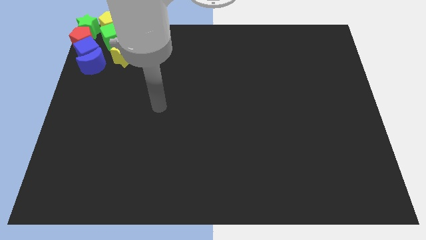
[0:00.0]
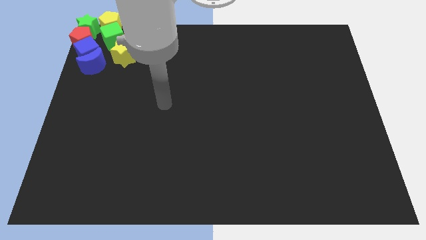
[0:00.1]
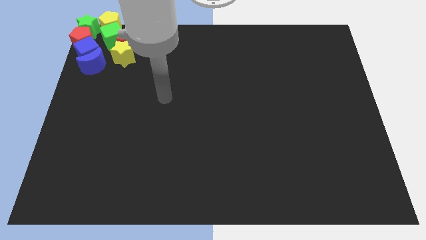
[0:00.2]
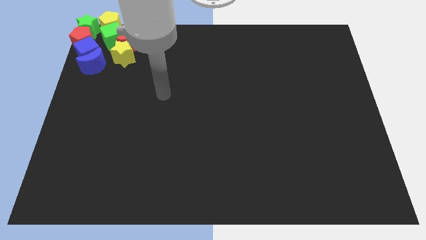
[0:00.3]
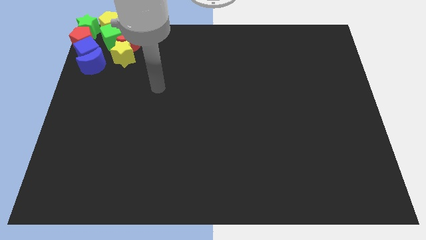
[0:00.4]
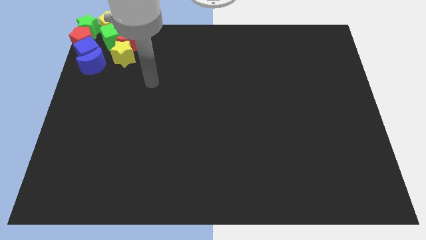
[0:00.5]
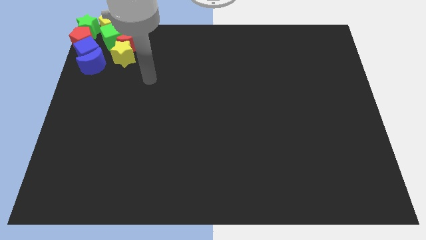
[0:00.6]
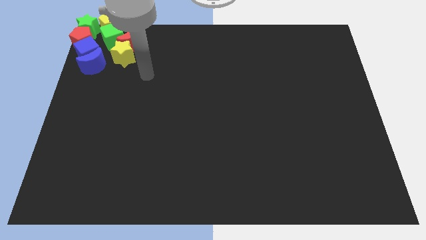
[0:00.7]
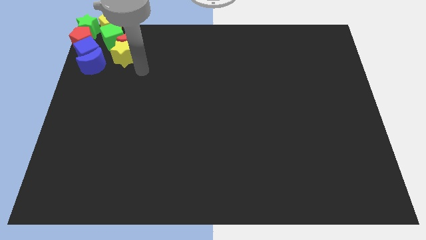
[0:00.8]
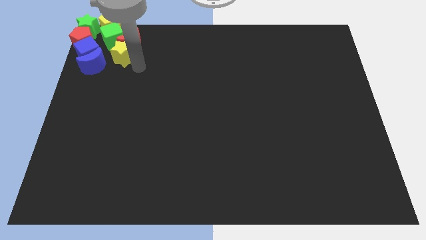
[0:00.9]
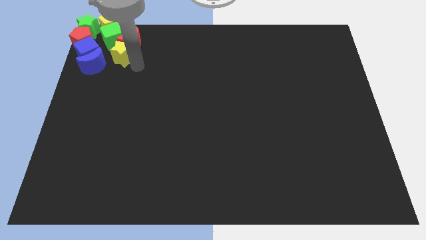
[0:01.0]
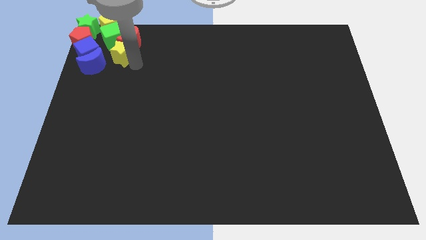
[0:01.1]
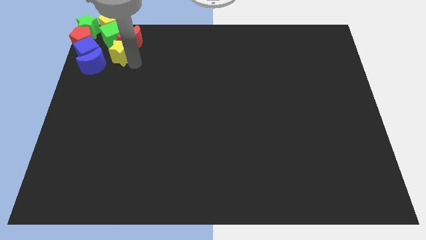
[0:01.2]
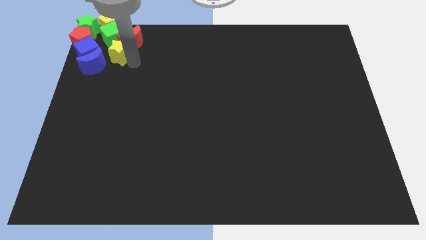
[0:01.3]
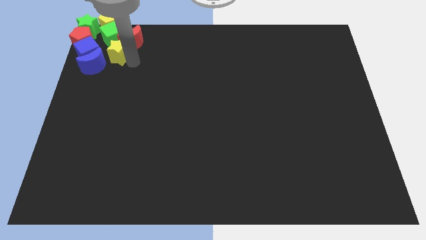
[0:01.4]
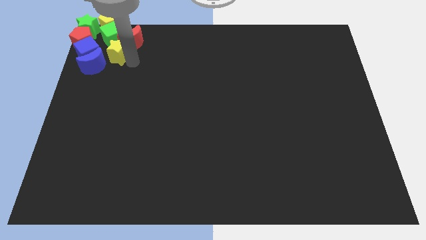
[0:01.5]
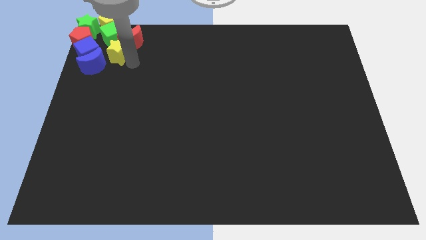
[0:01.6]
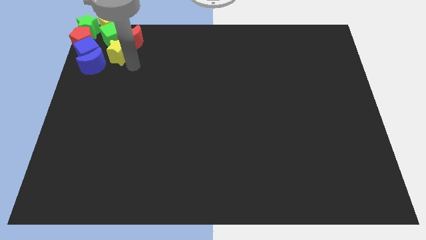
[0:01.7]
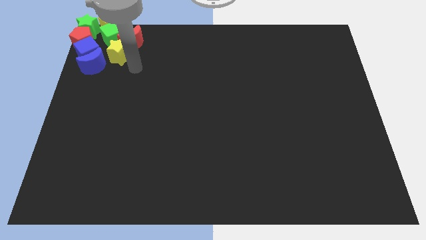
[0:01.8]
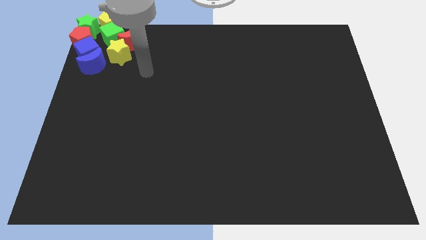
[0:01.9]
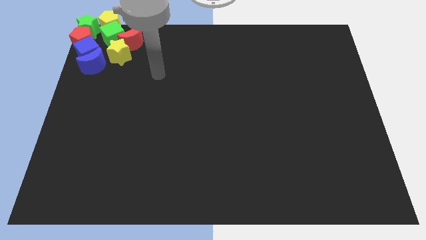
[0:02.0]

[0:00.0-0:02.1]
make a group of all the blocks

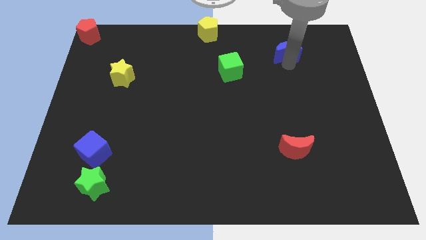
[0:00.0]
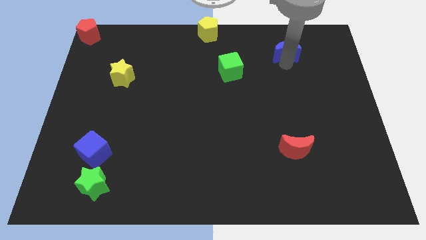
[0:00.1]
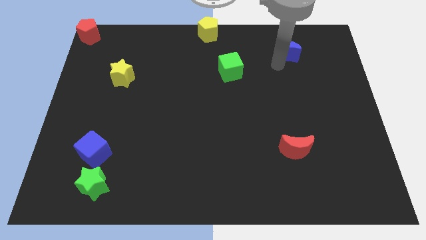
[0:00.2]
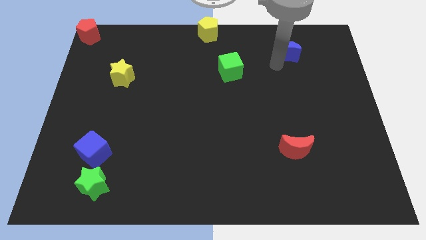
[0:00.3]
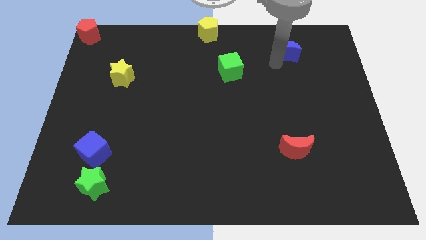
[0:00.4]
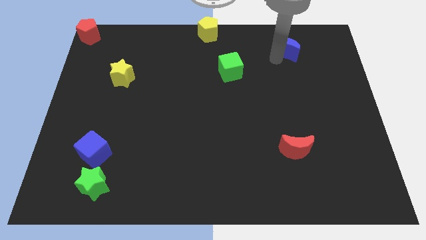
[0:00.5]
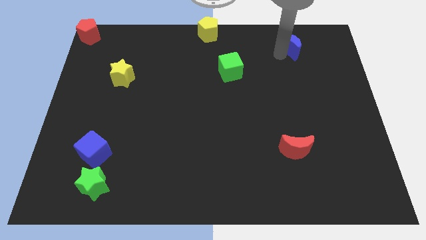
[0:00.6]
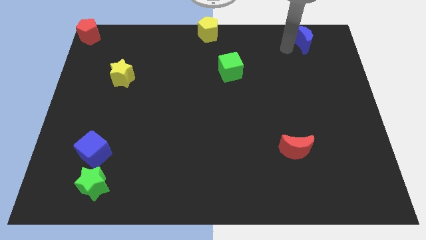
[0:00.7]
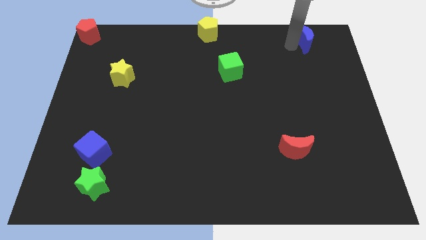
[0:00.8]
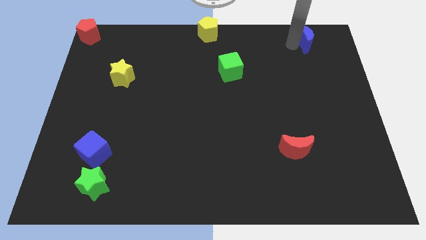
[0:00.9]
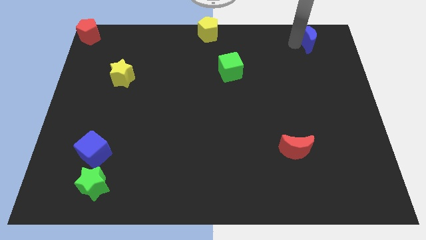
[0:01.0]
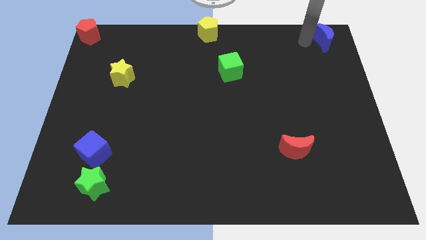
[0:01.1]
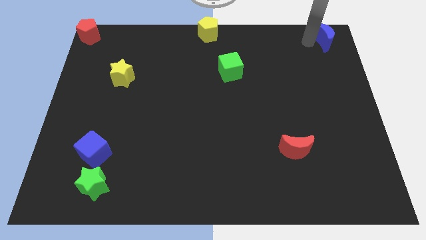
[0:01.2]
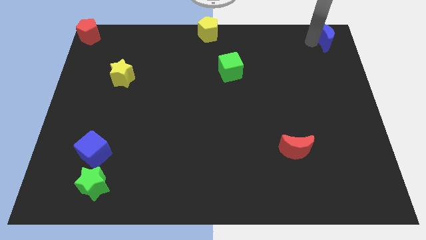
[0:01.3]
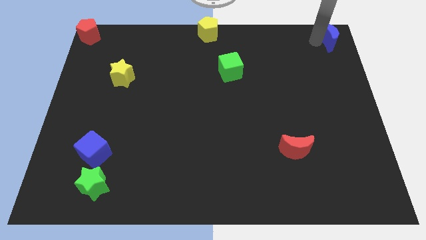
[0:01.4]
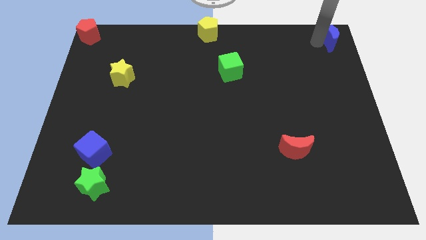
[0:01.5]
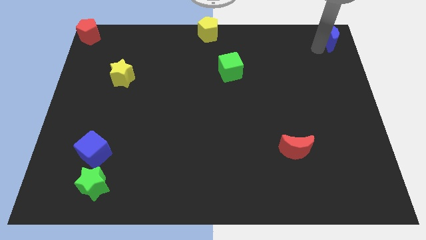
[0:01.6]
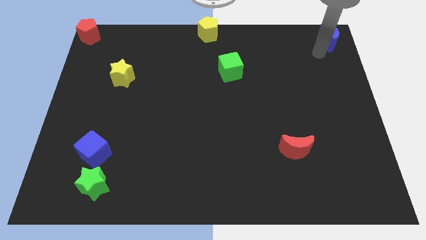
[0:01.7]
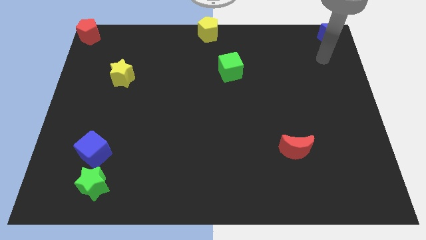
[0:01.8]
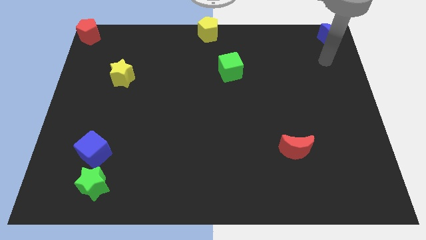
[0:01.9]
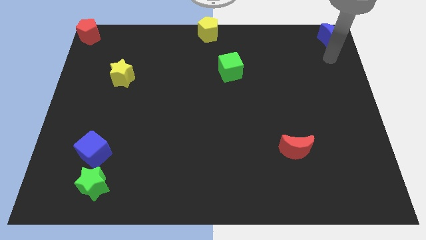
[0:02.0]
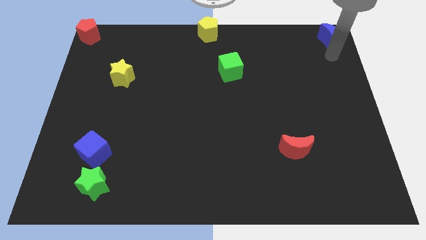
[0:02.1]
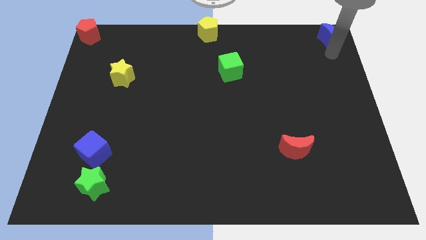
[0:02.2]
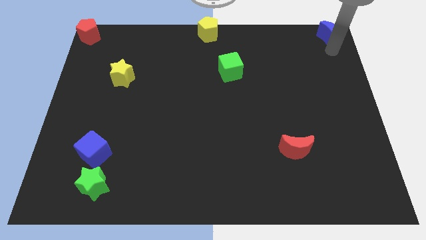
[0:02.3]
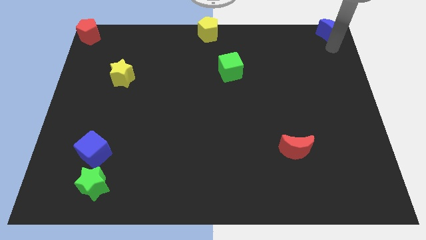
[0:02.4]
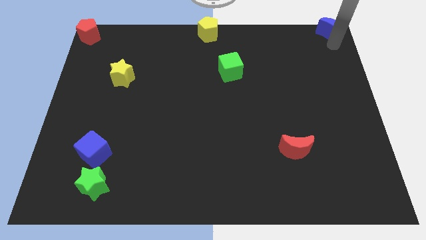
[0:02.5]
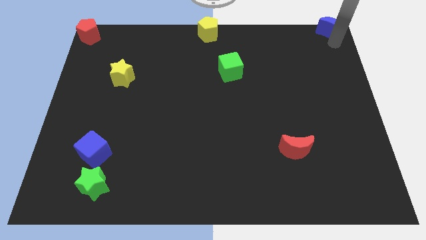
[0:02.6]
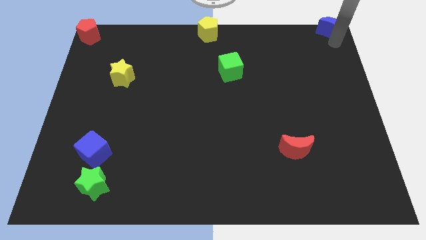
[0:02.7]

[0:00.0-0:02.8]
push the blue moon to the top right corner of the board

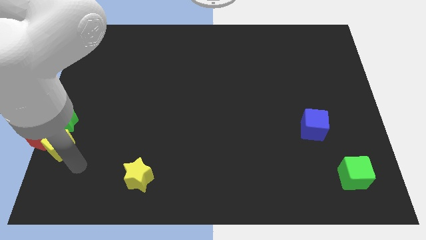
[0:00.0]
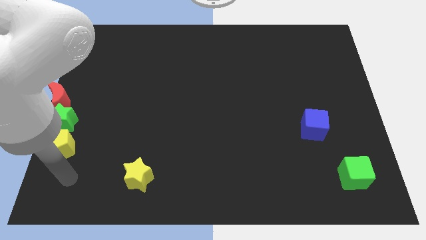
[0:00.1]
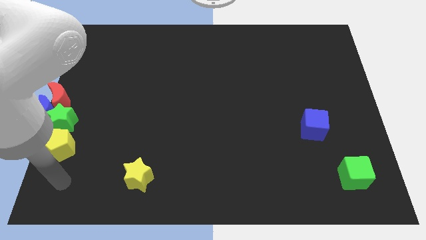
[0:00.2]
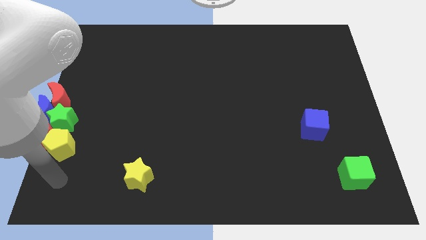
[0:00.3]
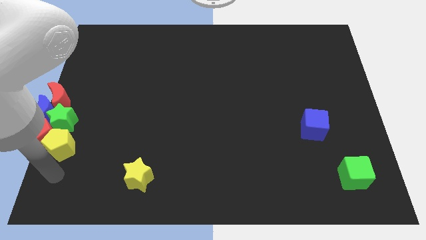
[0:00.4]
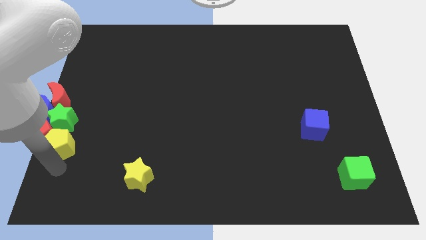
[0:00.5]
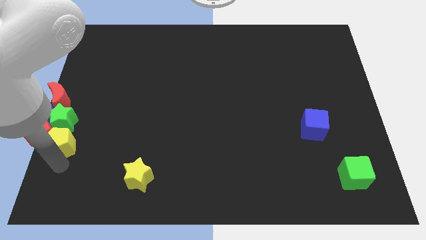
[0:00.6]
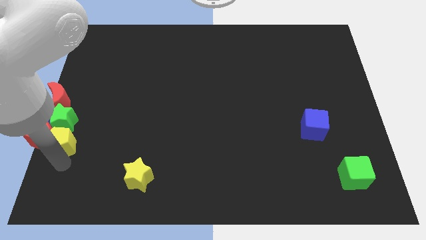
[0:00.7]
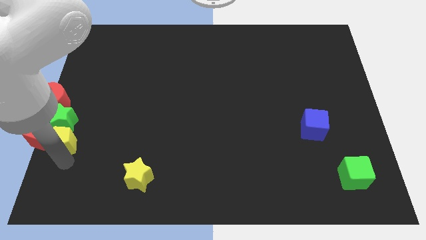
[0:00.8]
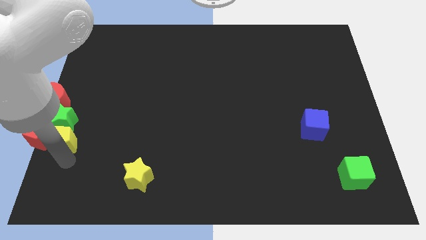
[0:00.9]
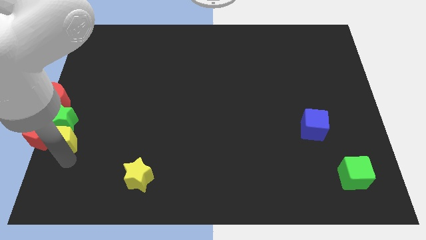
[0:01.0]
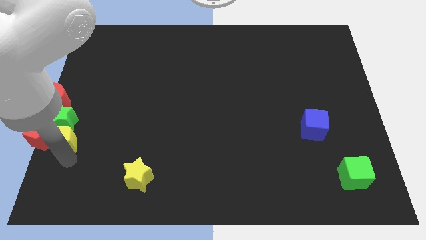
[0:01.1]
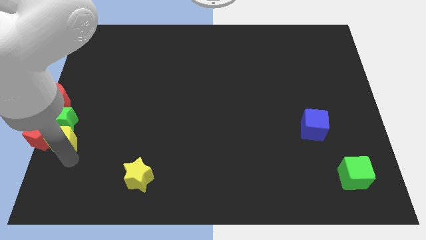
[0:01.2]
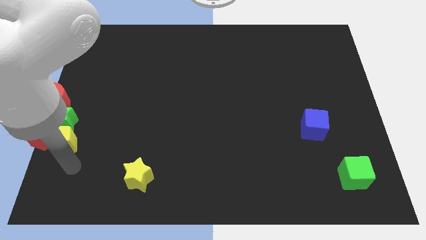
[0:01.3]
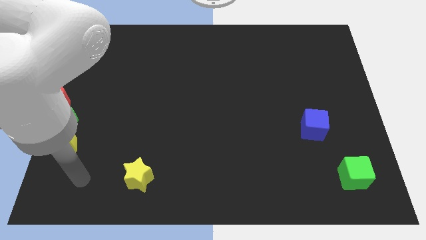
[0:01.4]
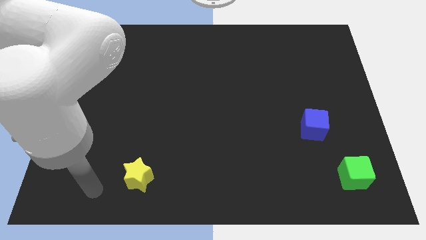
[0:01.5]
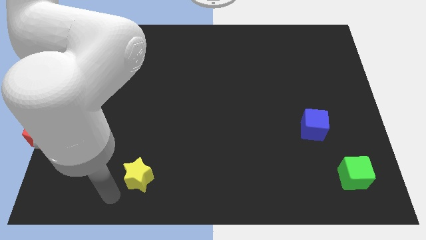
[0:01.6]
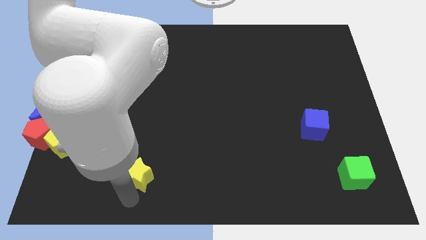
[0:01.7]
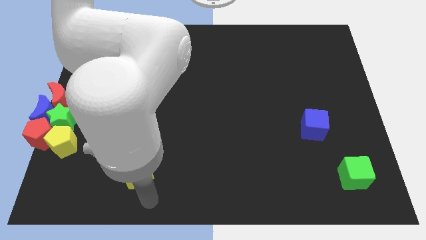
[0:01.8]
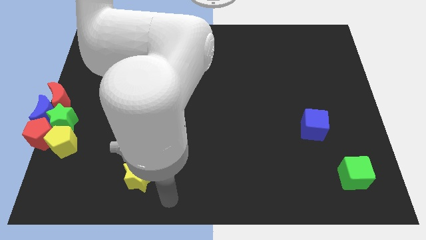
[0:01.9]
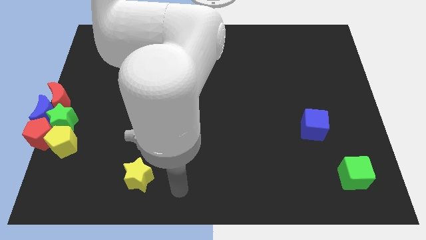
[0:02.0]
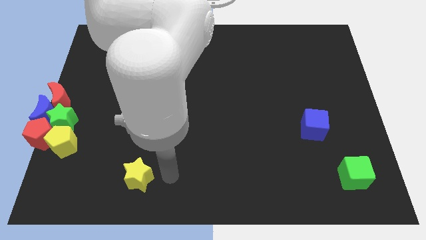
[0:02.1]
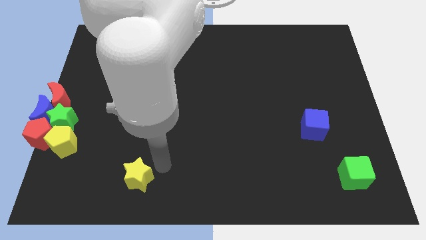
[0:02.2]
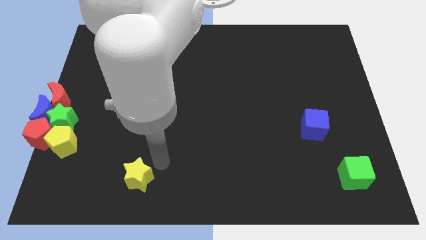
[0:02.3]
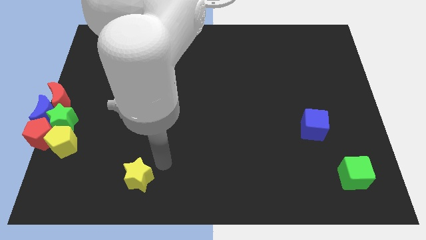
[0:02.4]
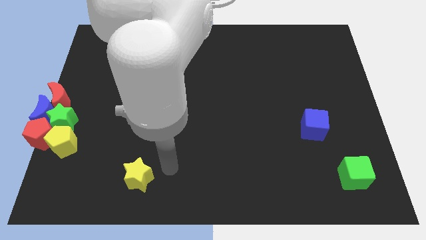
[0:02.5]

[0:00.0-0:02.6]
move your arm to the right of yellow star

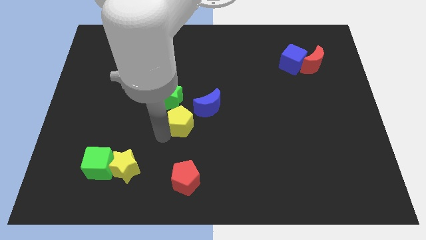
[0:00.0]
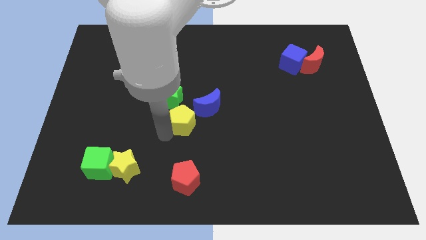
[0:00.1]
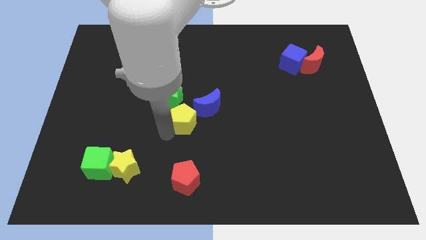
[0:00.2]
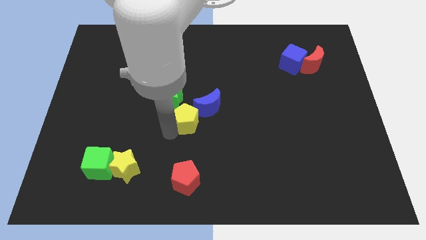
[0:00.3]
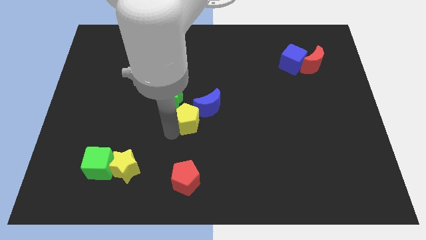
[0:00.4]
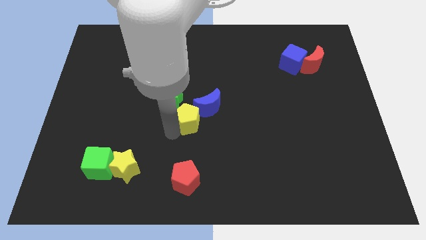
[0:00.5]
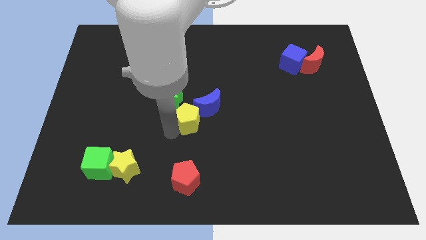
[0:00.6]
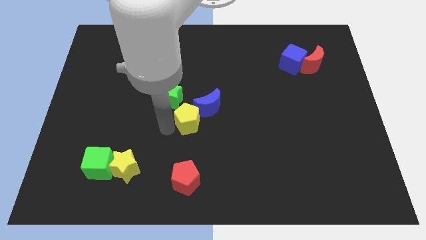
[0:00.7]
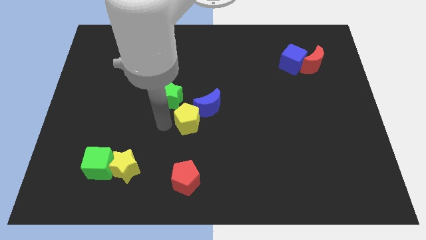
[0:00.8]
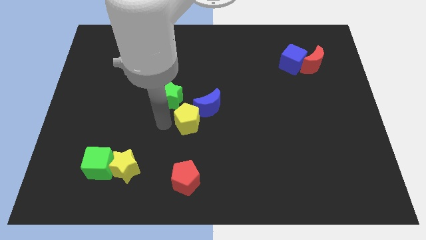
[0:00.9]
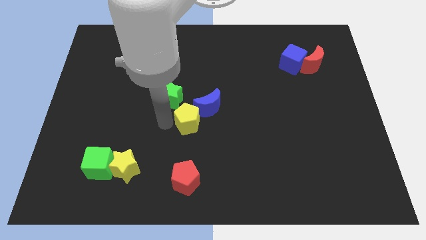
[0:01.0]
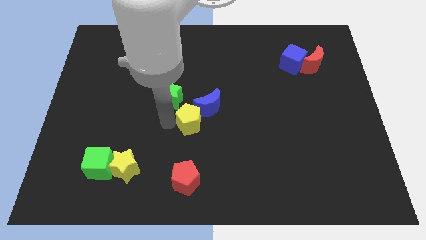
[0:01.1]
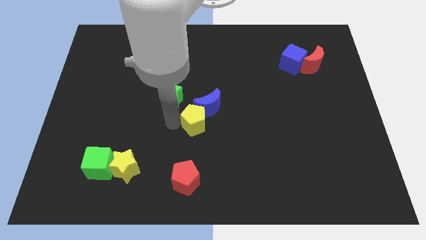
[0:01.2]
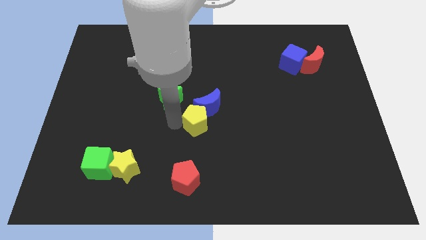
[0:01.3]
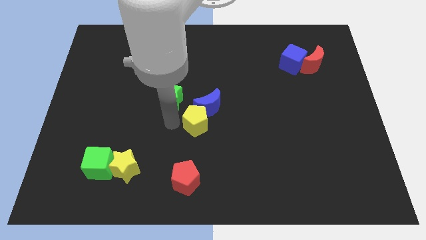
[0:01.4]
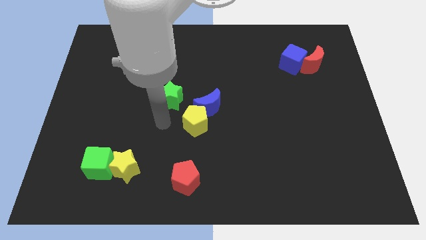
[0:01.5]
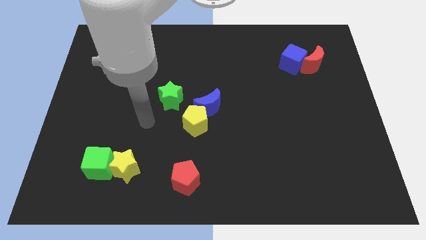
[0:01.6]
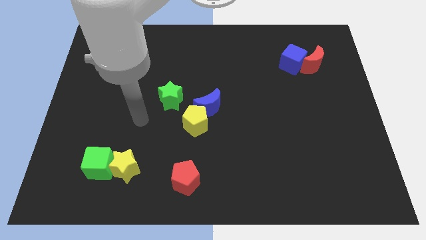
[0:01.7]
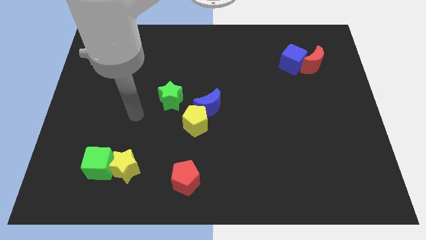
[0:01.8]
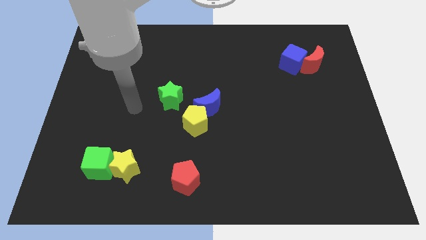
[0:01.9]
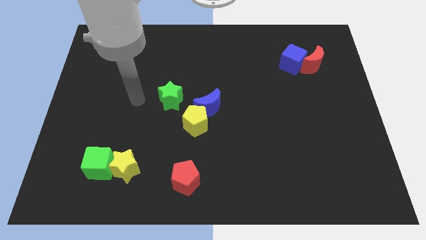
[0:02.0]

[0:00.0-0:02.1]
slide yellow pentagon into blue moon
